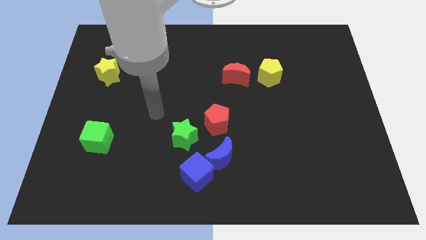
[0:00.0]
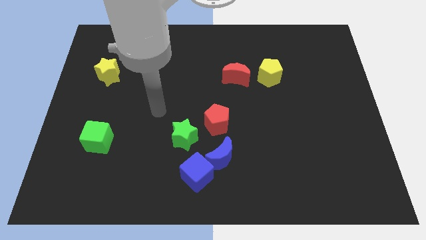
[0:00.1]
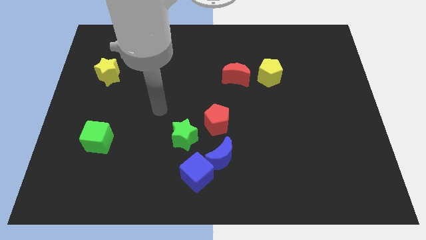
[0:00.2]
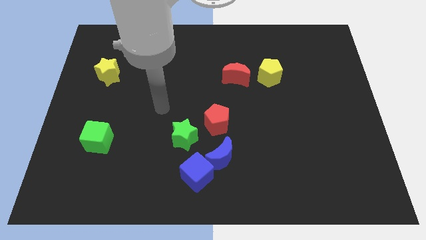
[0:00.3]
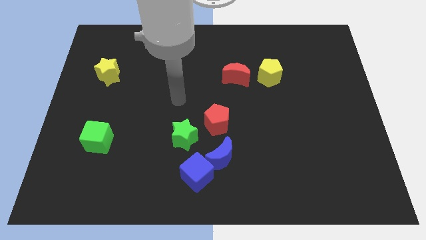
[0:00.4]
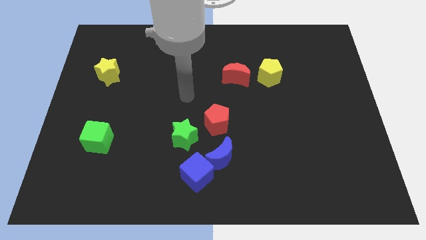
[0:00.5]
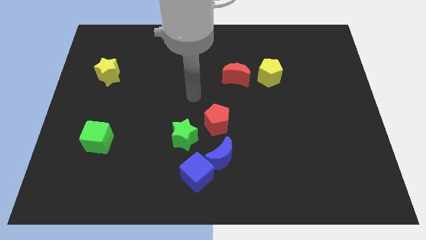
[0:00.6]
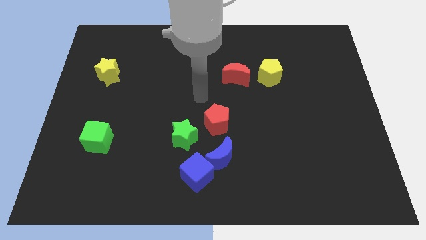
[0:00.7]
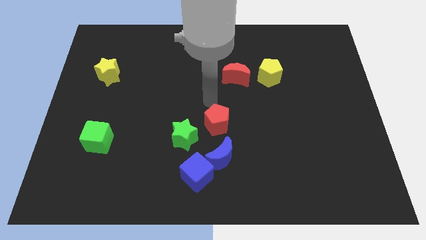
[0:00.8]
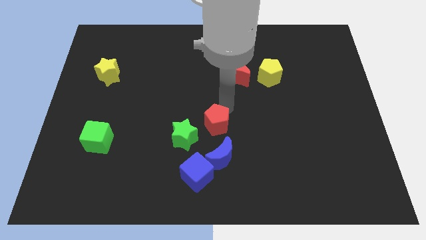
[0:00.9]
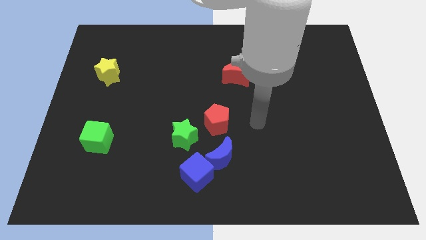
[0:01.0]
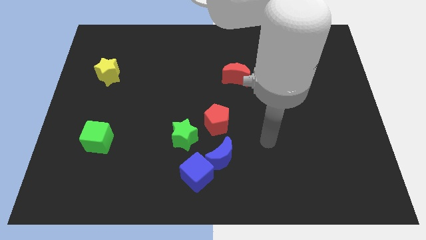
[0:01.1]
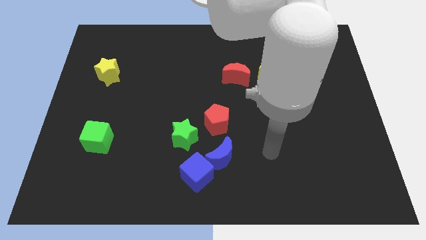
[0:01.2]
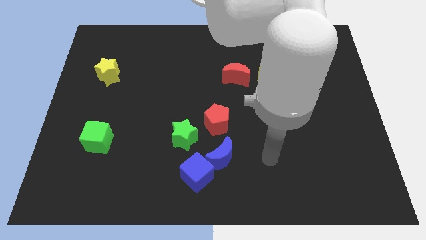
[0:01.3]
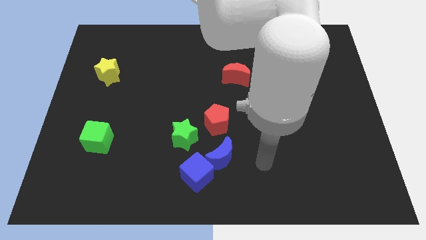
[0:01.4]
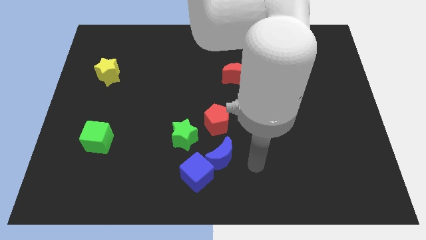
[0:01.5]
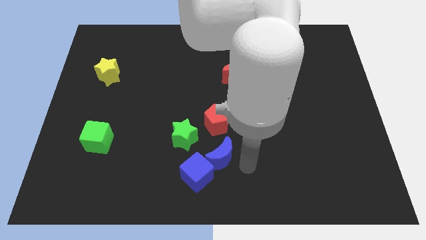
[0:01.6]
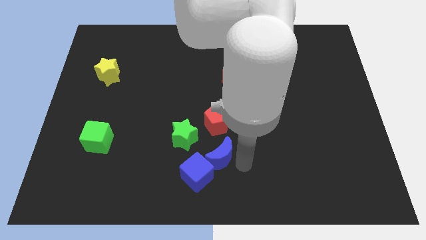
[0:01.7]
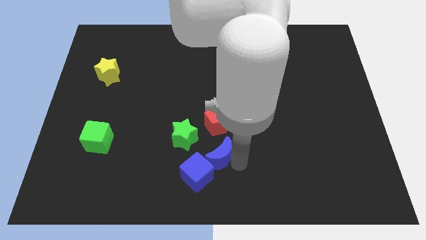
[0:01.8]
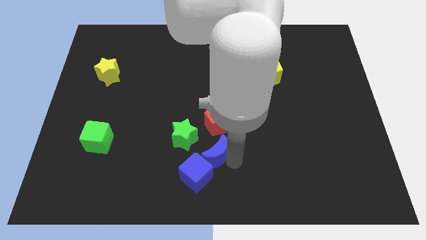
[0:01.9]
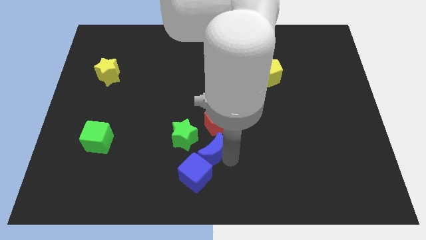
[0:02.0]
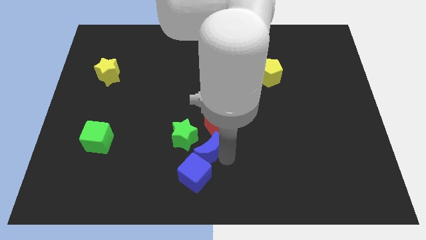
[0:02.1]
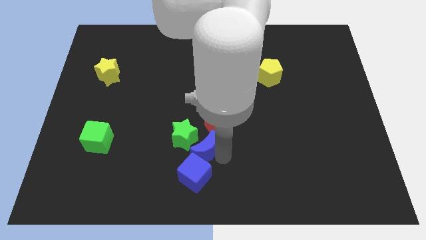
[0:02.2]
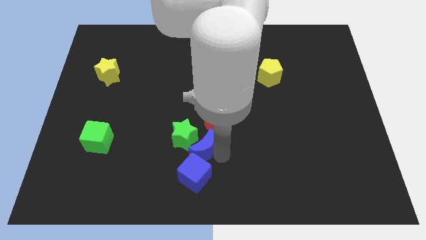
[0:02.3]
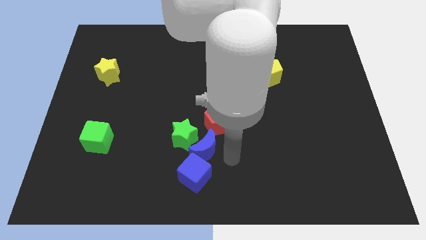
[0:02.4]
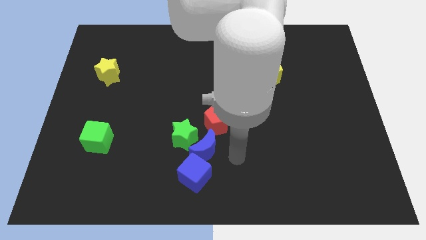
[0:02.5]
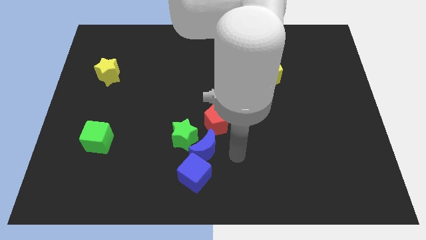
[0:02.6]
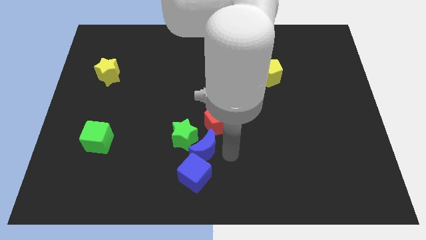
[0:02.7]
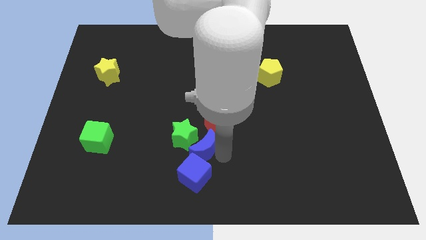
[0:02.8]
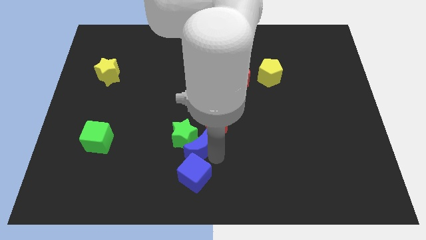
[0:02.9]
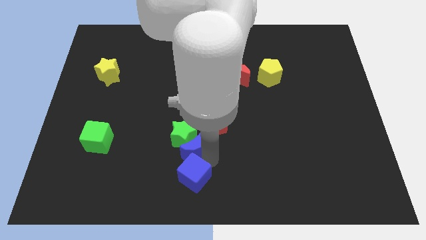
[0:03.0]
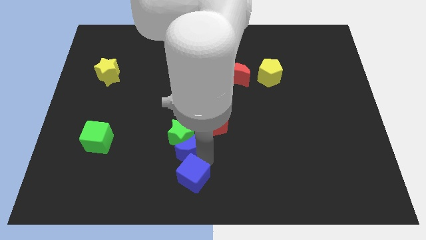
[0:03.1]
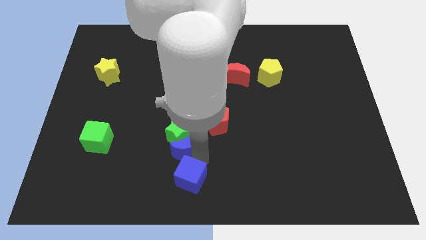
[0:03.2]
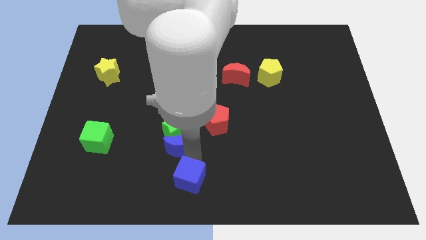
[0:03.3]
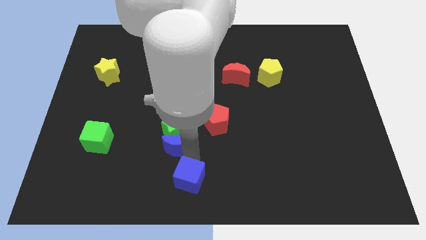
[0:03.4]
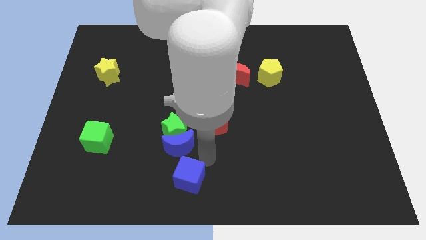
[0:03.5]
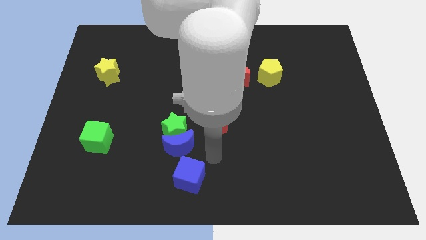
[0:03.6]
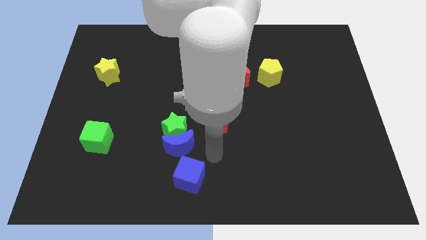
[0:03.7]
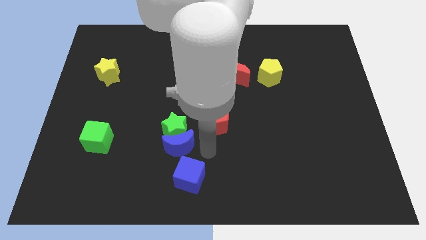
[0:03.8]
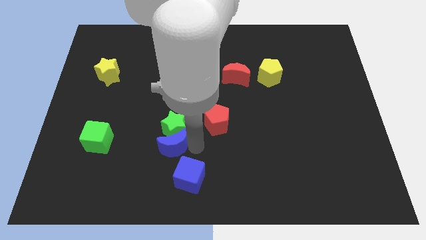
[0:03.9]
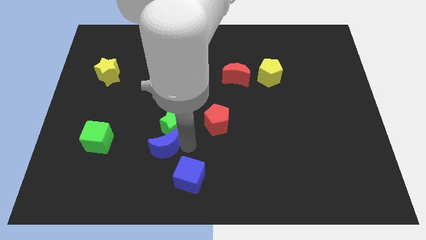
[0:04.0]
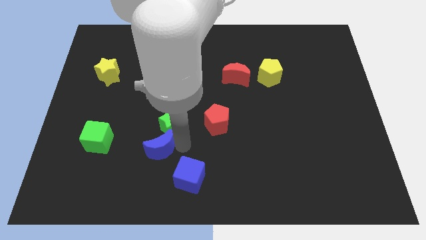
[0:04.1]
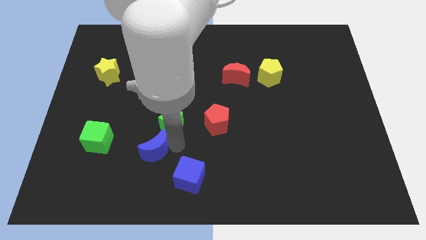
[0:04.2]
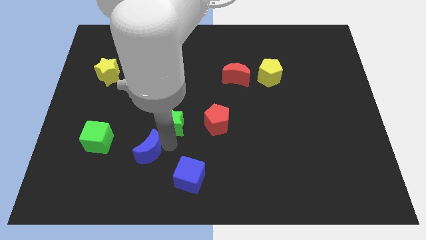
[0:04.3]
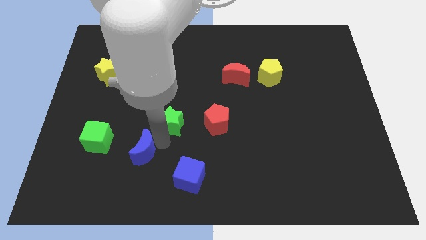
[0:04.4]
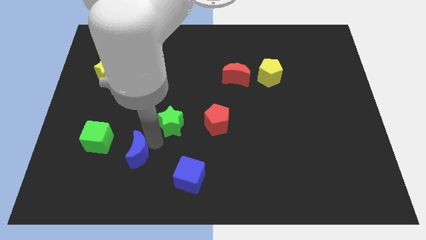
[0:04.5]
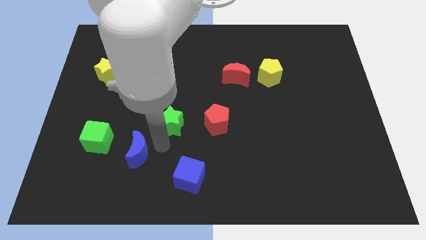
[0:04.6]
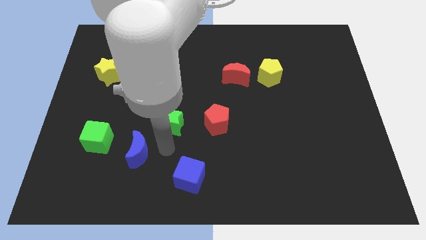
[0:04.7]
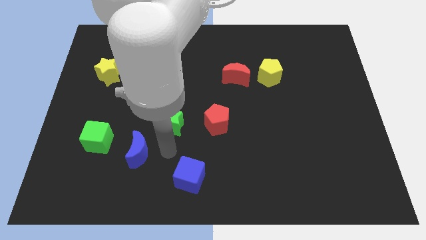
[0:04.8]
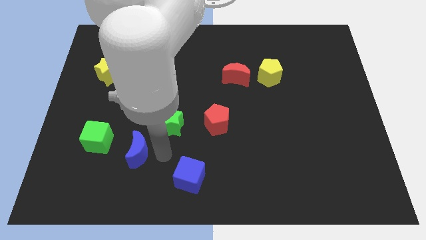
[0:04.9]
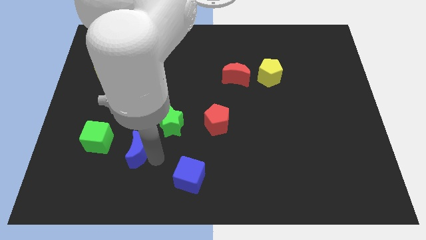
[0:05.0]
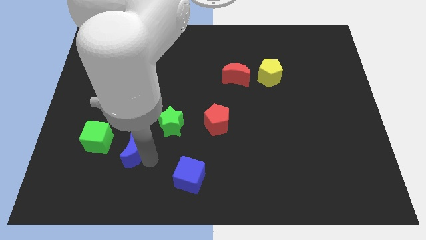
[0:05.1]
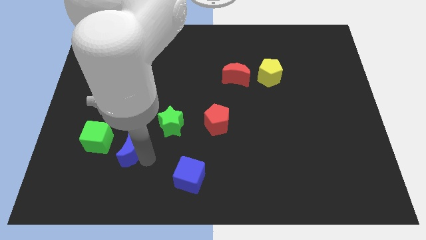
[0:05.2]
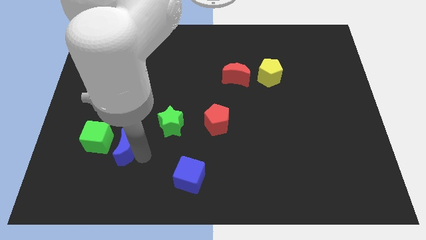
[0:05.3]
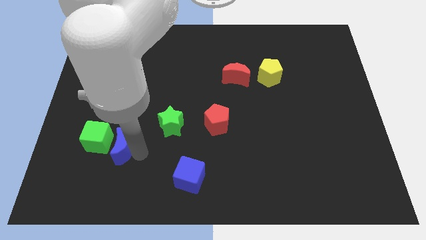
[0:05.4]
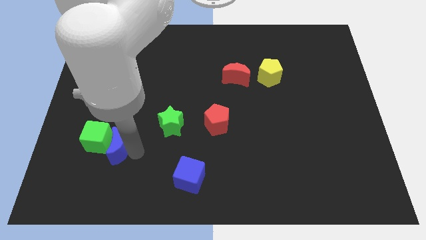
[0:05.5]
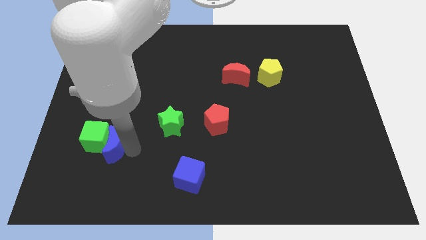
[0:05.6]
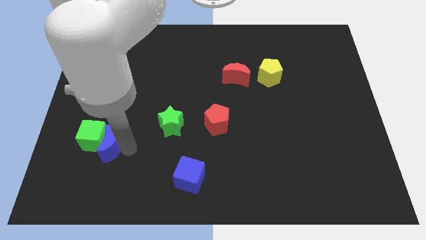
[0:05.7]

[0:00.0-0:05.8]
push the blue moon close to the green cube

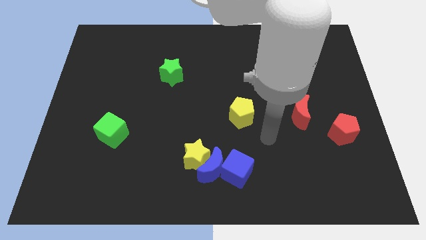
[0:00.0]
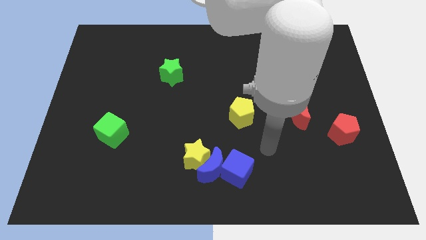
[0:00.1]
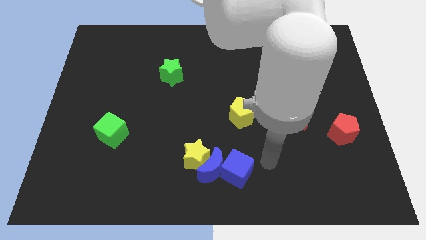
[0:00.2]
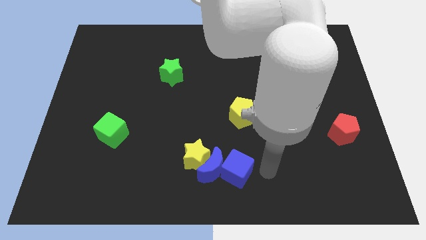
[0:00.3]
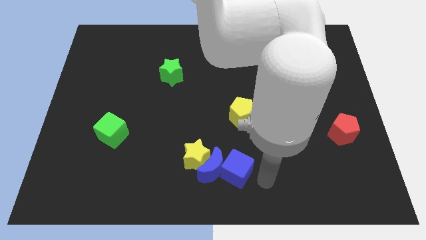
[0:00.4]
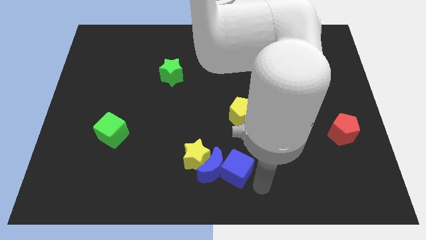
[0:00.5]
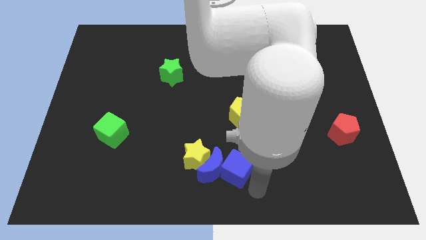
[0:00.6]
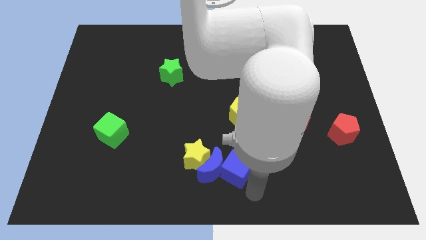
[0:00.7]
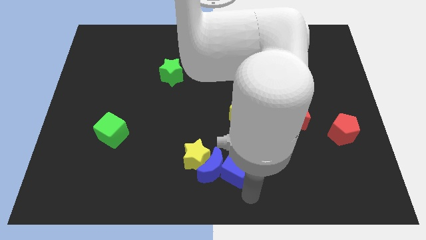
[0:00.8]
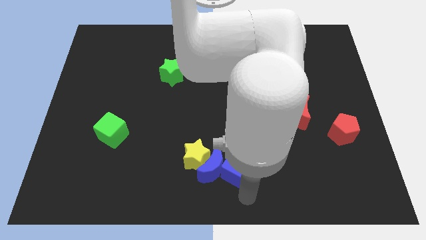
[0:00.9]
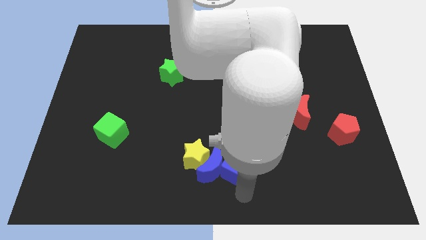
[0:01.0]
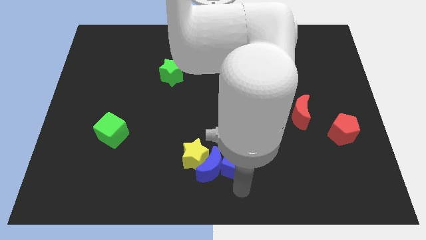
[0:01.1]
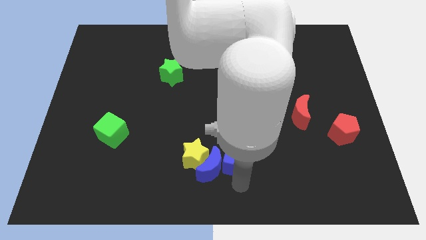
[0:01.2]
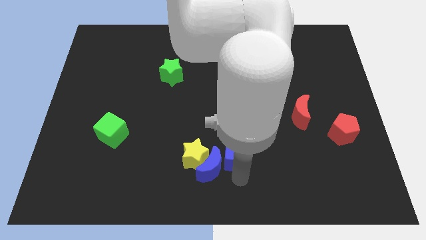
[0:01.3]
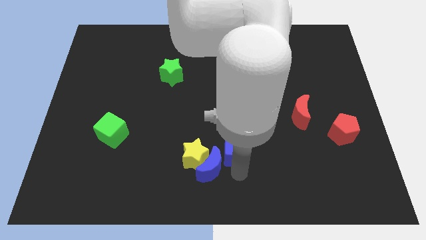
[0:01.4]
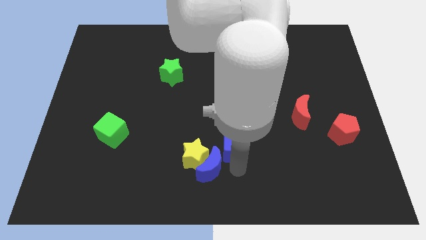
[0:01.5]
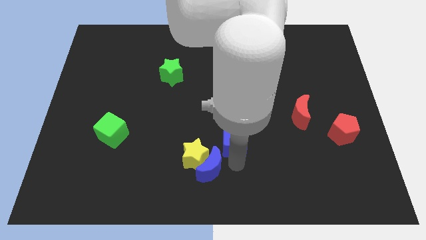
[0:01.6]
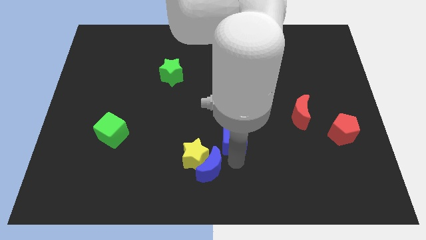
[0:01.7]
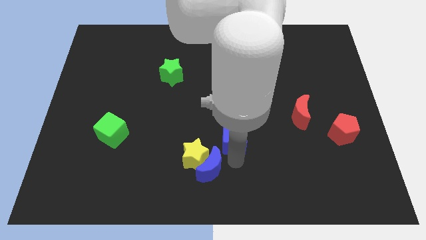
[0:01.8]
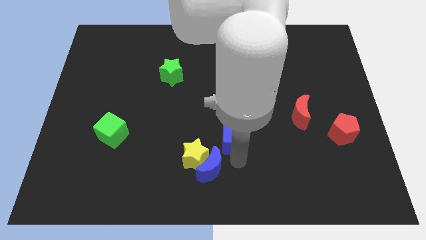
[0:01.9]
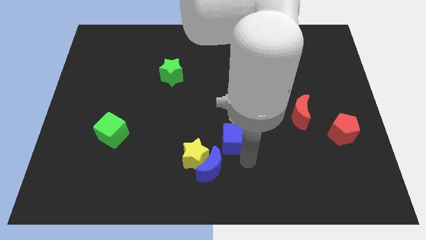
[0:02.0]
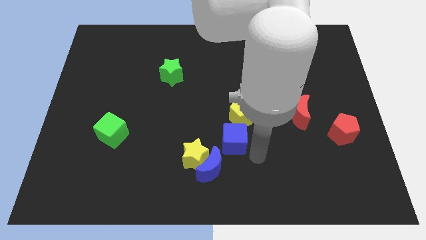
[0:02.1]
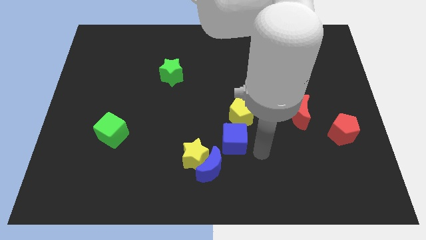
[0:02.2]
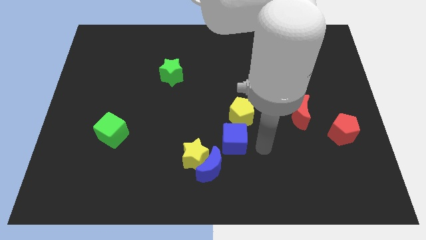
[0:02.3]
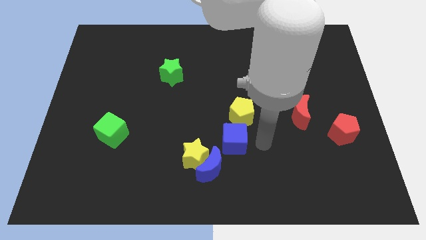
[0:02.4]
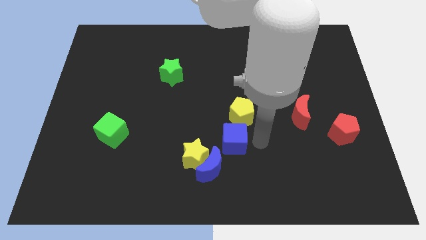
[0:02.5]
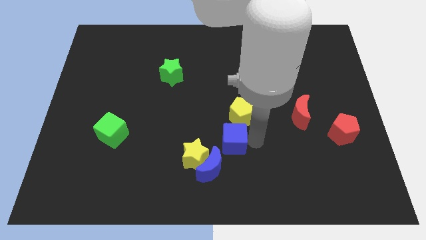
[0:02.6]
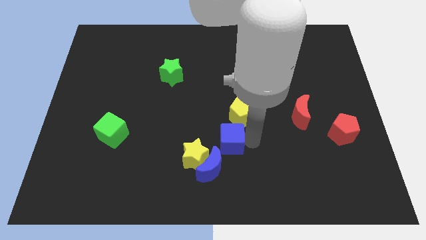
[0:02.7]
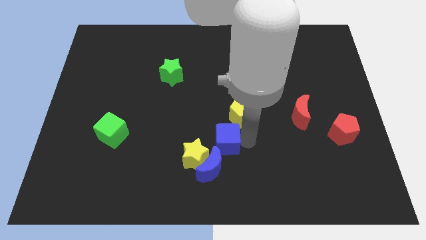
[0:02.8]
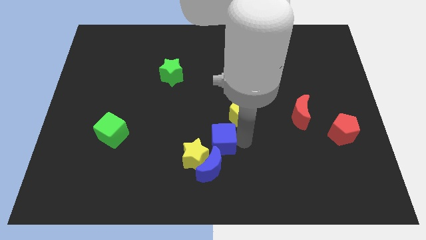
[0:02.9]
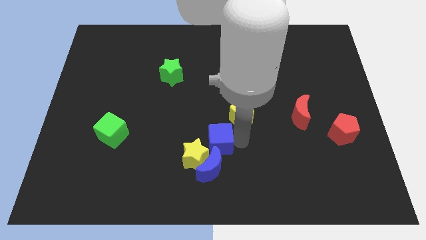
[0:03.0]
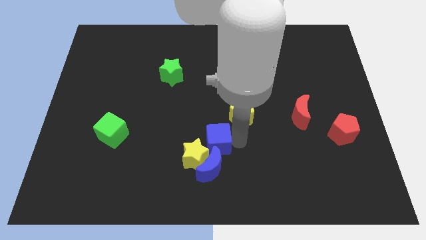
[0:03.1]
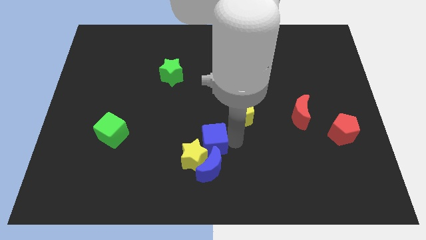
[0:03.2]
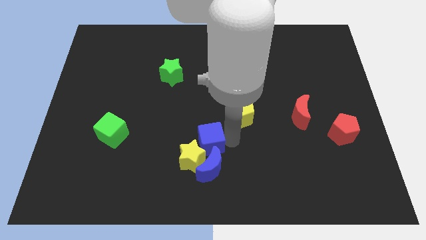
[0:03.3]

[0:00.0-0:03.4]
slide the blue cube next to the yellow star
